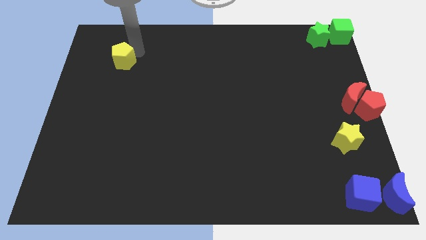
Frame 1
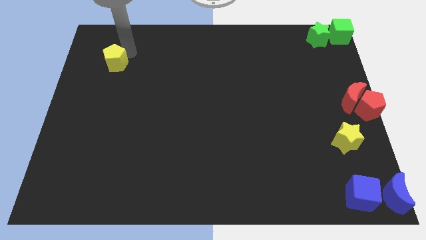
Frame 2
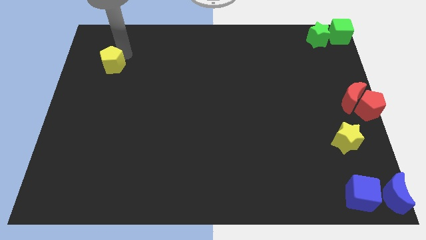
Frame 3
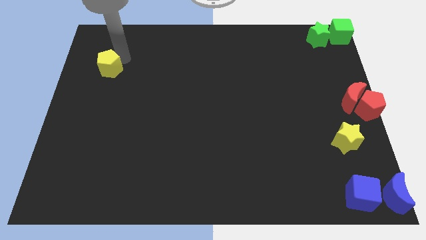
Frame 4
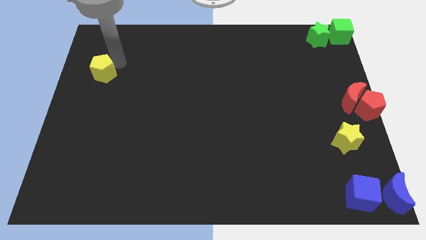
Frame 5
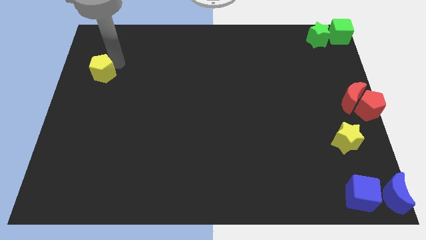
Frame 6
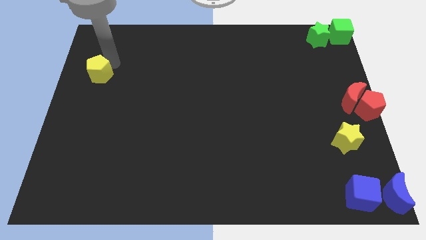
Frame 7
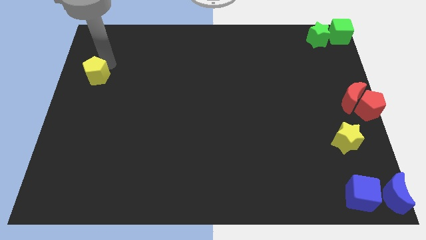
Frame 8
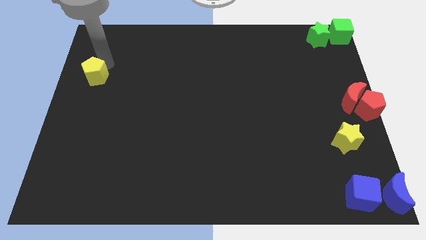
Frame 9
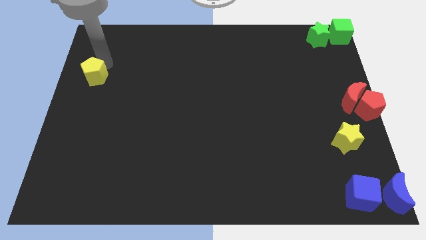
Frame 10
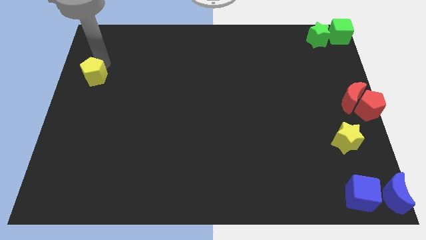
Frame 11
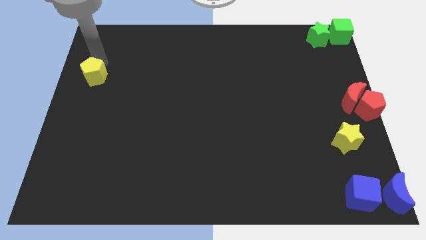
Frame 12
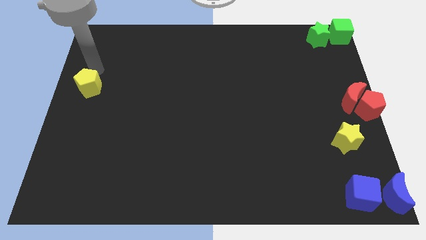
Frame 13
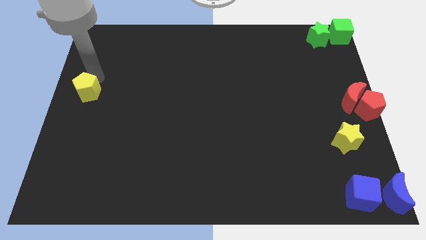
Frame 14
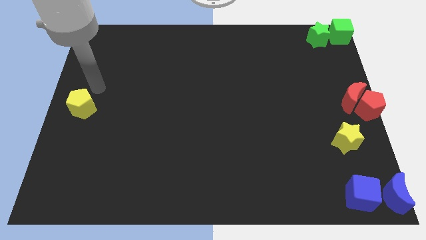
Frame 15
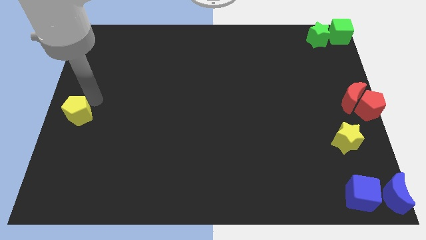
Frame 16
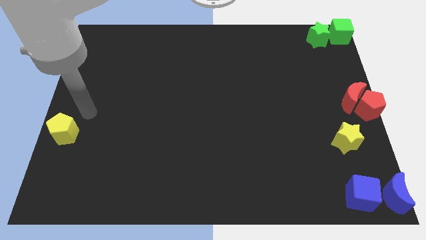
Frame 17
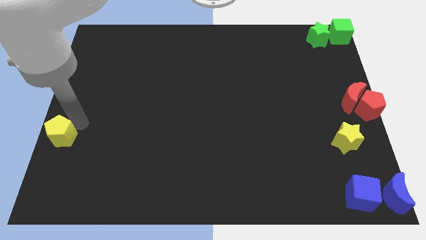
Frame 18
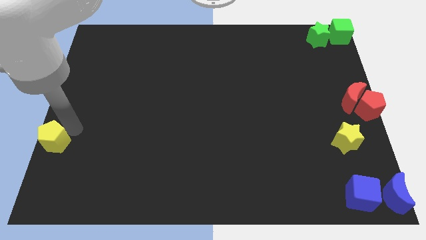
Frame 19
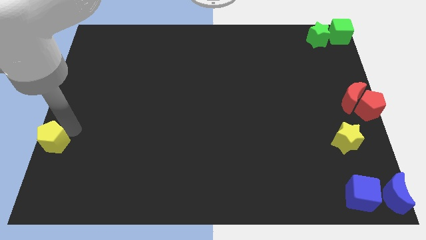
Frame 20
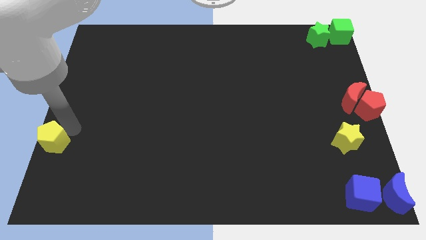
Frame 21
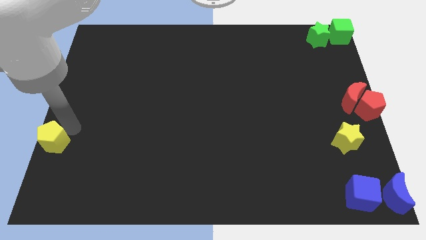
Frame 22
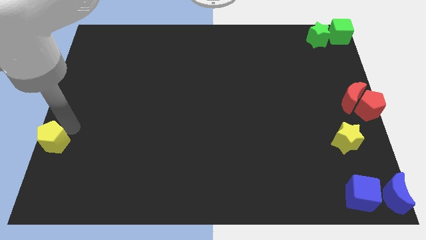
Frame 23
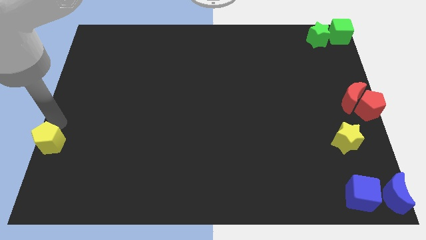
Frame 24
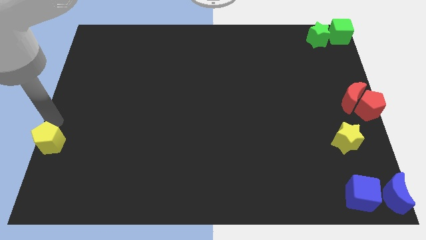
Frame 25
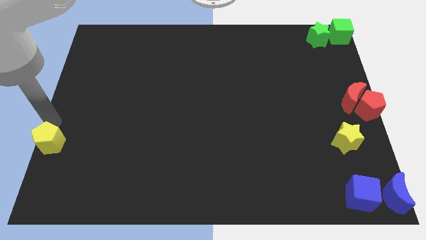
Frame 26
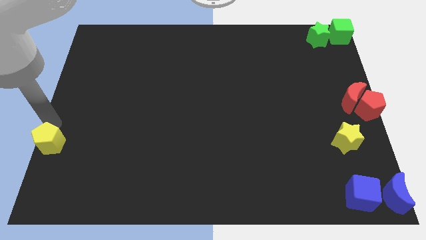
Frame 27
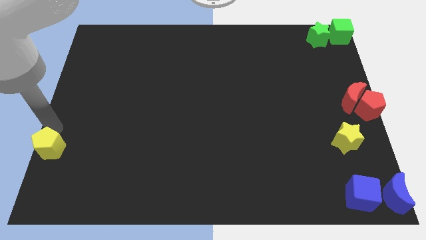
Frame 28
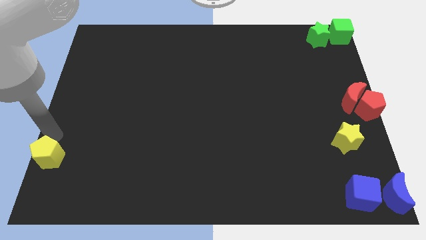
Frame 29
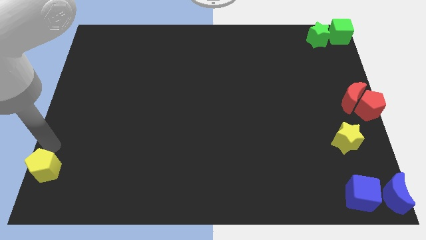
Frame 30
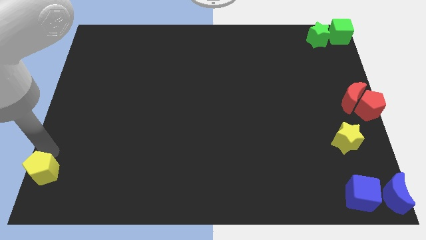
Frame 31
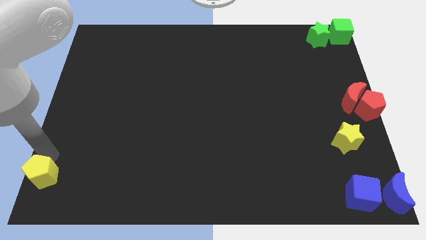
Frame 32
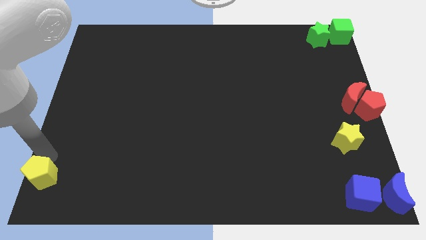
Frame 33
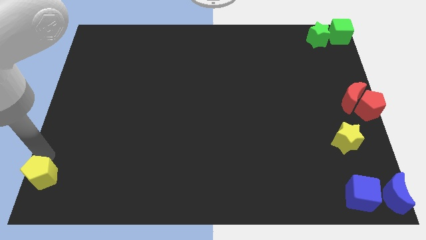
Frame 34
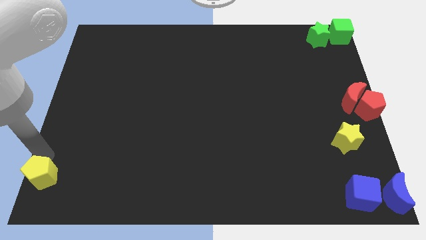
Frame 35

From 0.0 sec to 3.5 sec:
move the yellow pentagon towards the bottom left corner of the board

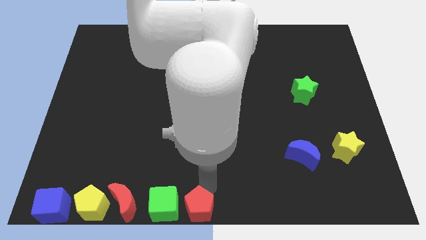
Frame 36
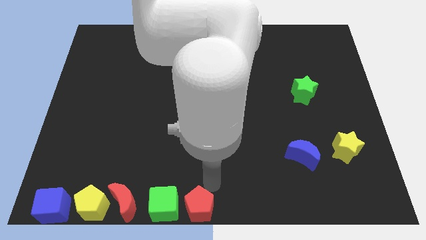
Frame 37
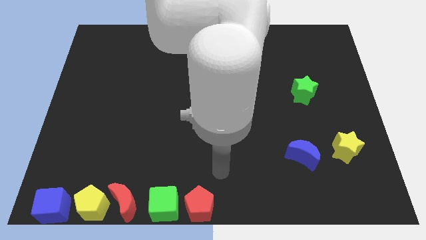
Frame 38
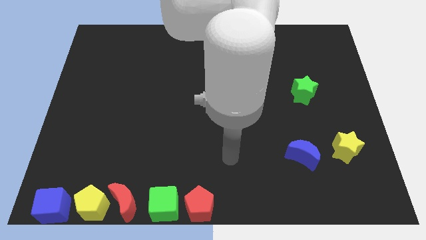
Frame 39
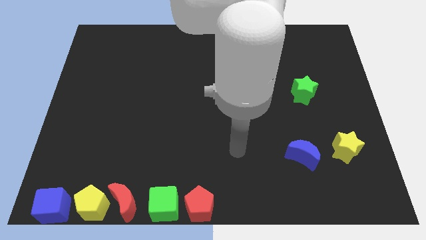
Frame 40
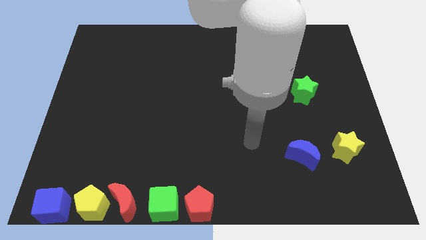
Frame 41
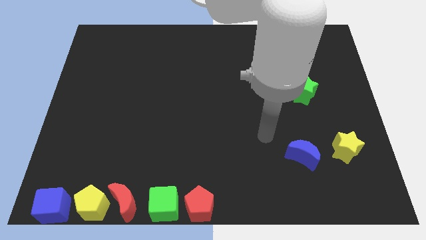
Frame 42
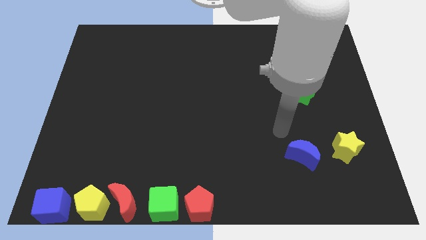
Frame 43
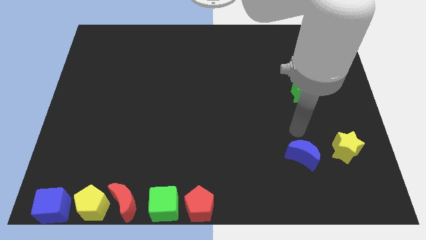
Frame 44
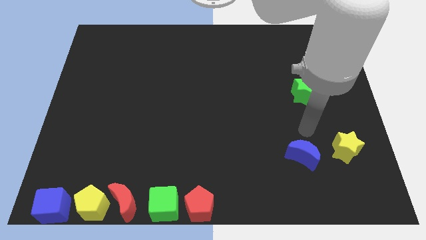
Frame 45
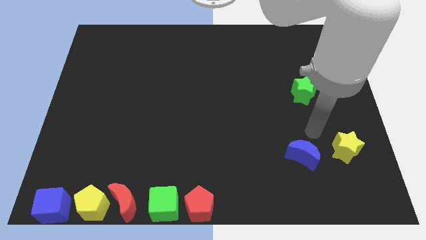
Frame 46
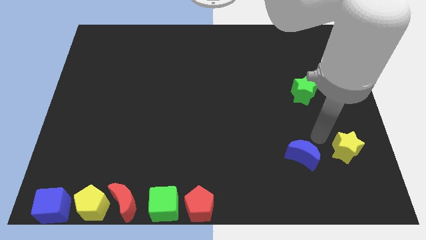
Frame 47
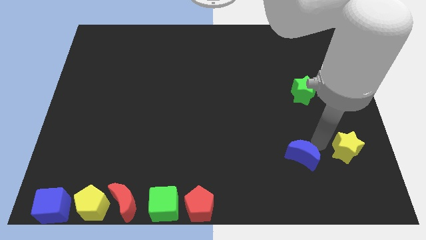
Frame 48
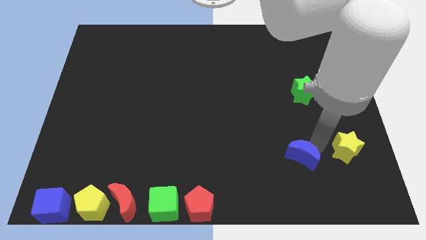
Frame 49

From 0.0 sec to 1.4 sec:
place the arm right to the blue moon

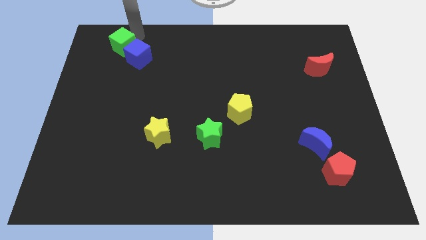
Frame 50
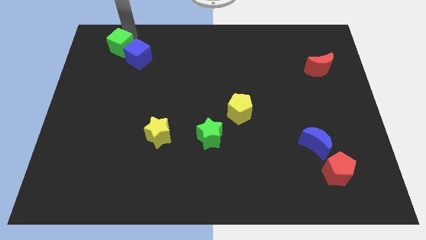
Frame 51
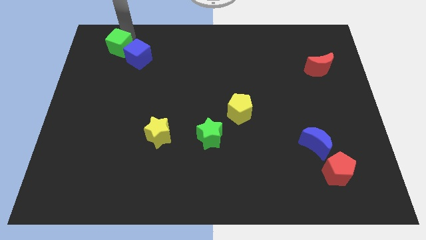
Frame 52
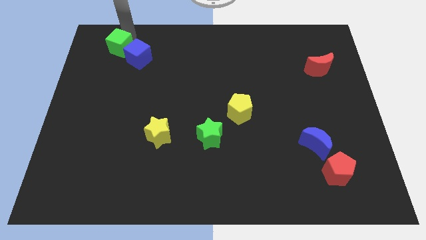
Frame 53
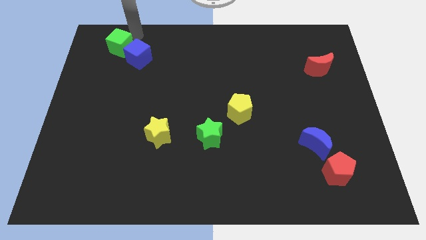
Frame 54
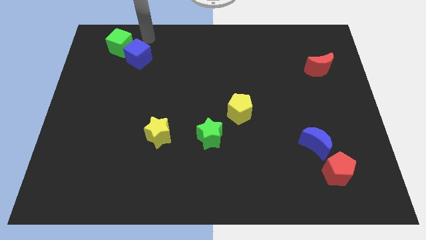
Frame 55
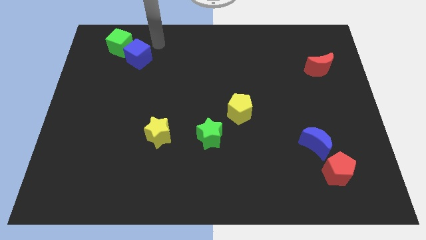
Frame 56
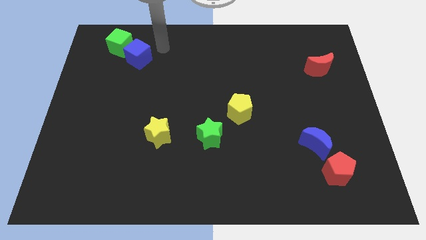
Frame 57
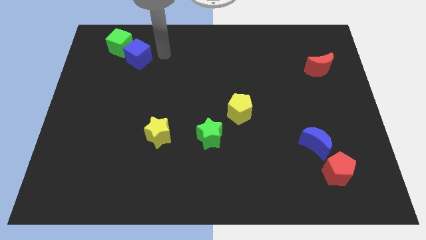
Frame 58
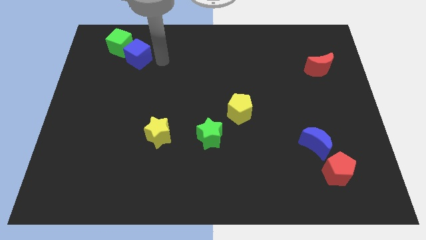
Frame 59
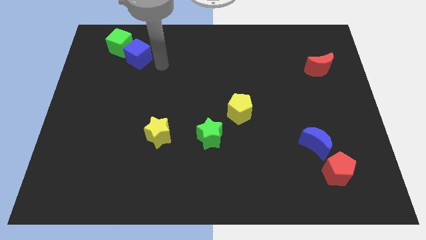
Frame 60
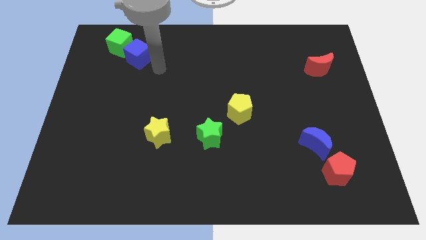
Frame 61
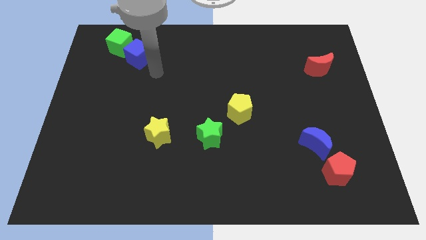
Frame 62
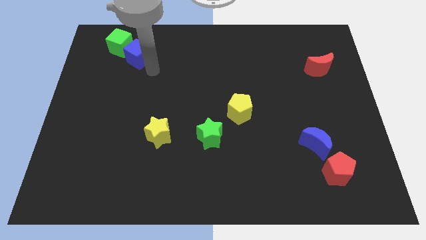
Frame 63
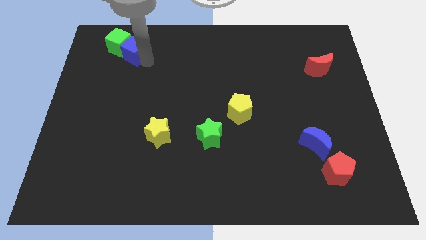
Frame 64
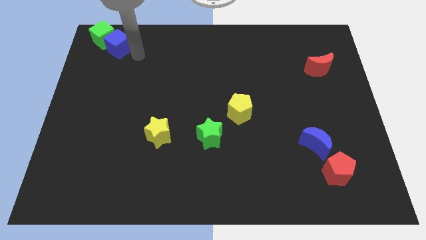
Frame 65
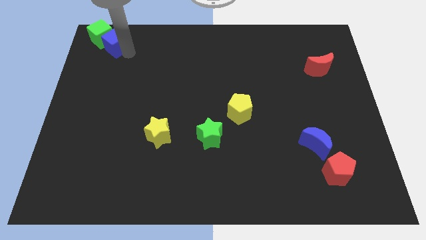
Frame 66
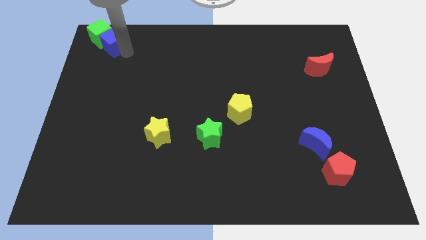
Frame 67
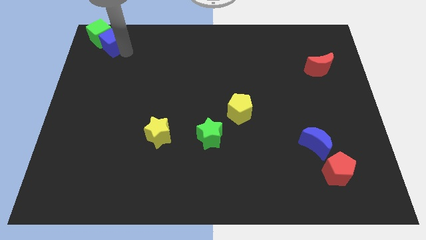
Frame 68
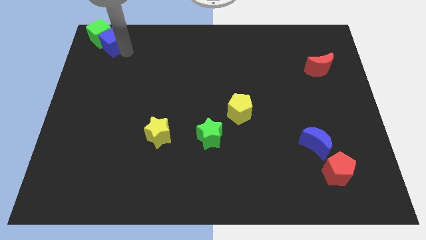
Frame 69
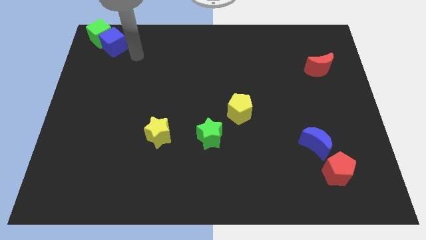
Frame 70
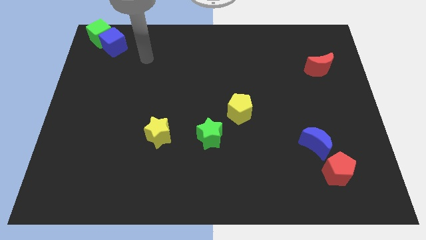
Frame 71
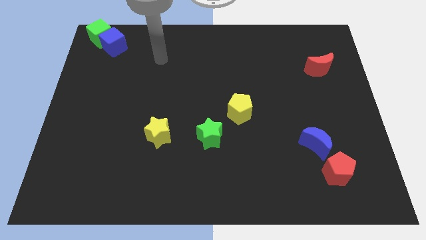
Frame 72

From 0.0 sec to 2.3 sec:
push the cubes to the corner left side

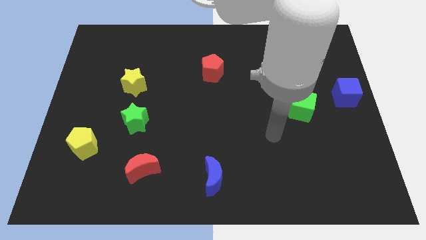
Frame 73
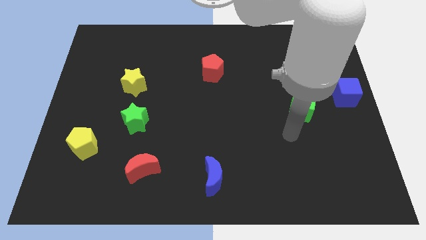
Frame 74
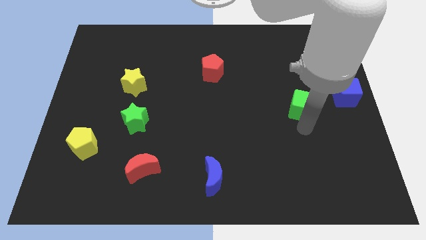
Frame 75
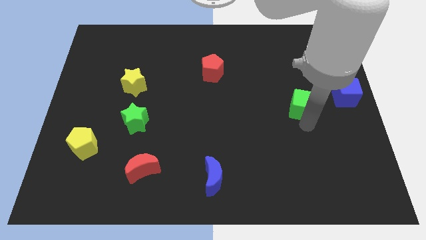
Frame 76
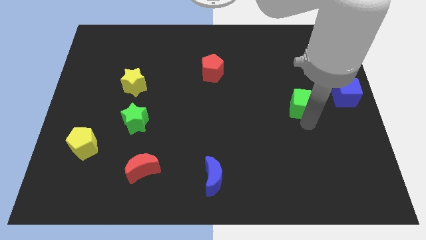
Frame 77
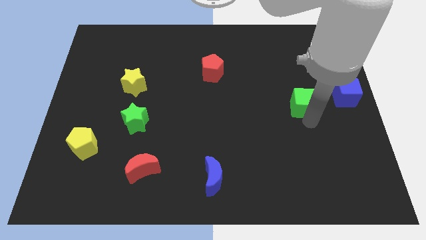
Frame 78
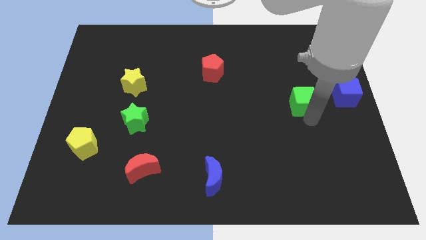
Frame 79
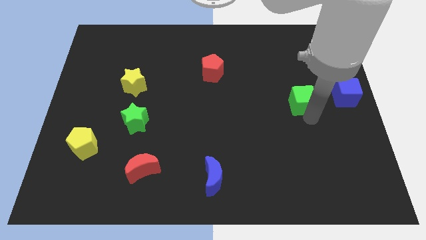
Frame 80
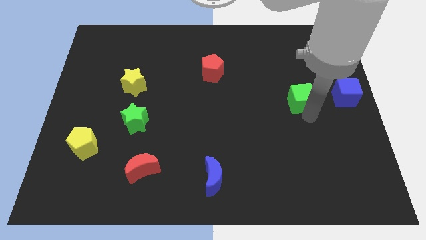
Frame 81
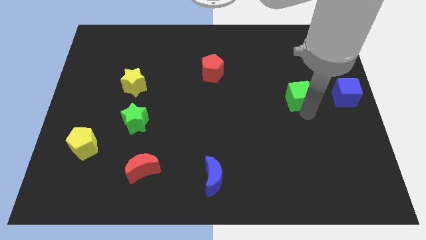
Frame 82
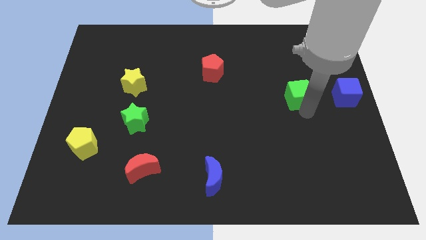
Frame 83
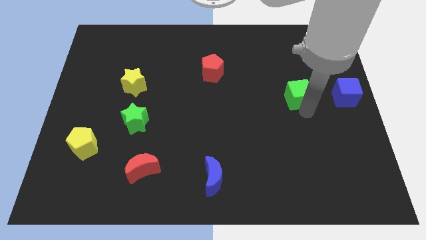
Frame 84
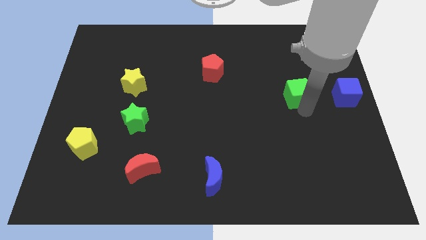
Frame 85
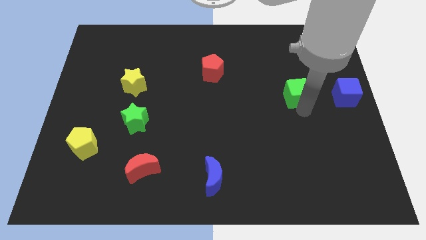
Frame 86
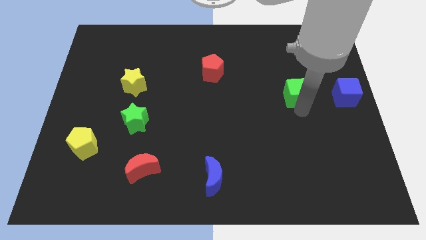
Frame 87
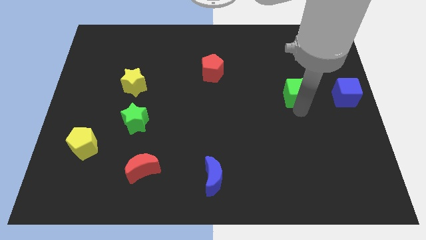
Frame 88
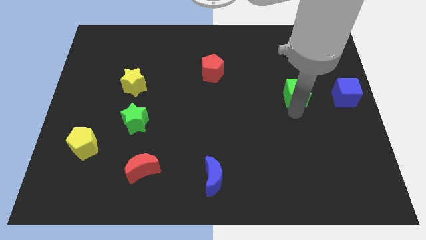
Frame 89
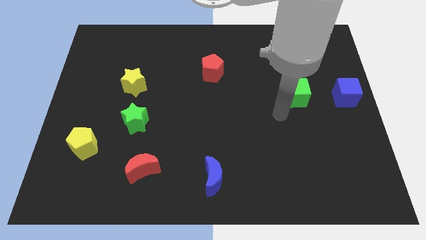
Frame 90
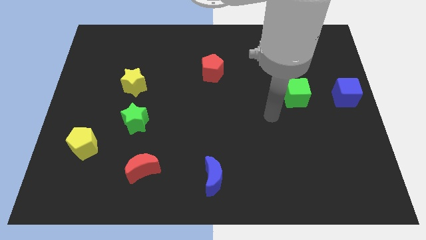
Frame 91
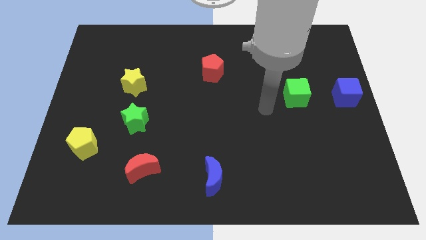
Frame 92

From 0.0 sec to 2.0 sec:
slightly push the green cube left to the blue cube
